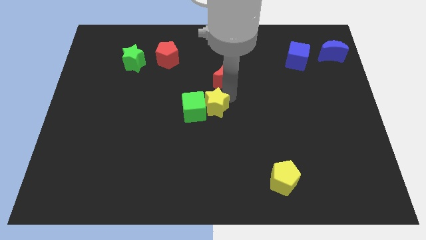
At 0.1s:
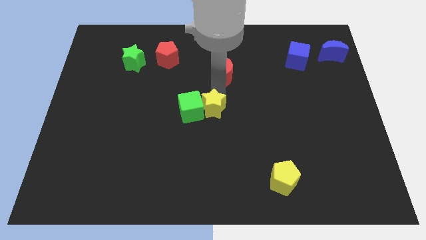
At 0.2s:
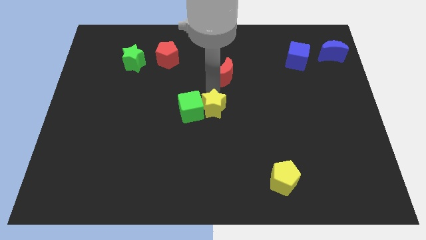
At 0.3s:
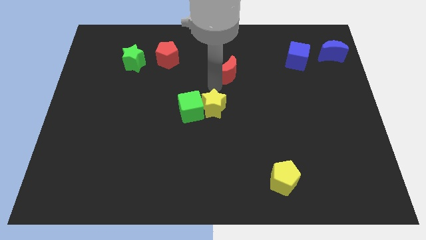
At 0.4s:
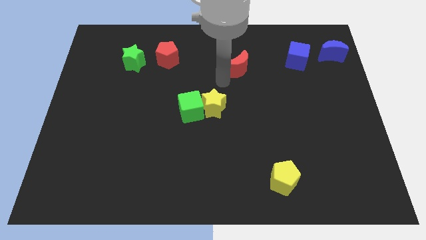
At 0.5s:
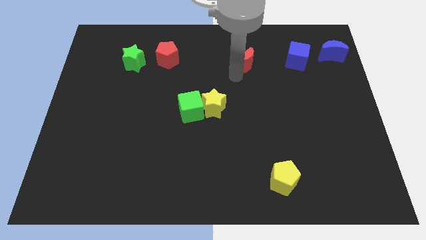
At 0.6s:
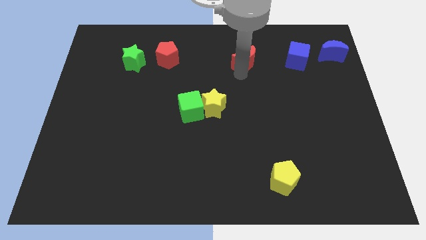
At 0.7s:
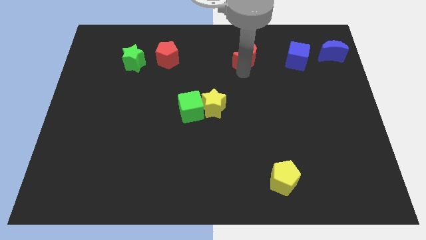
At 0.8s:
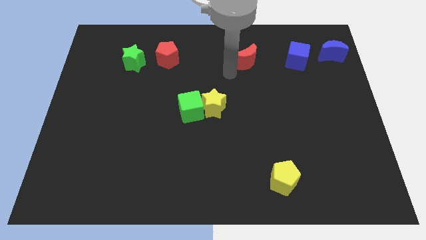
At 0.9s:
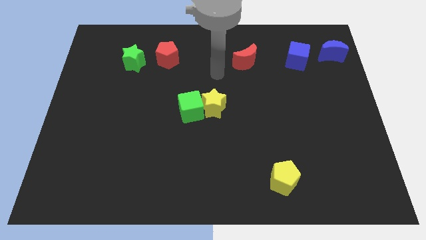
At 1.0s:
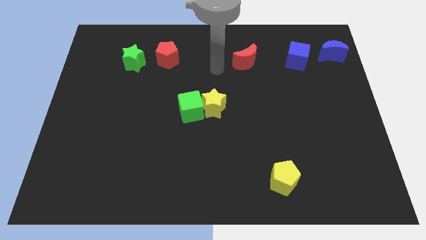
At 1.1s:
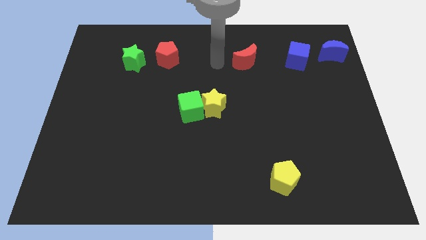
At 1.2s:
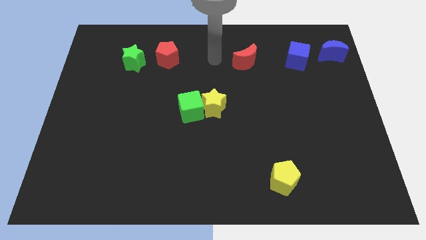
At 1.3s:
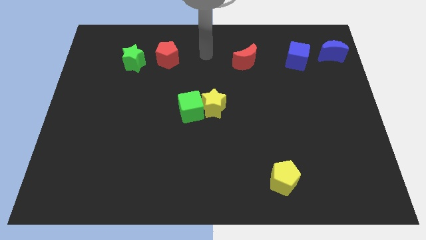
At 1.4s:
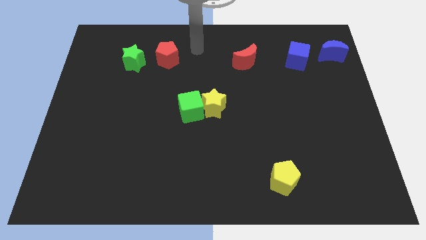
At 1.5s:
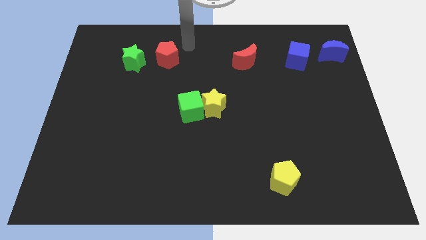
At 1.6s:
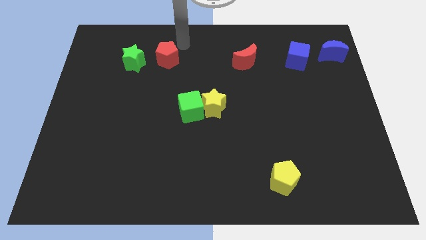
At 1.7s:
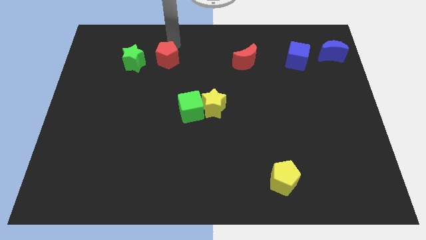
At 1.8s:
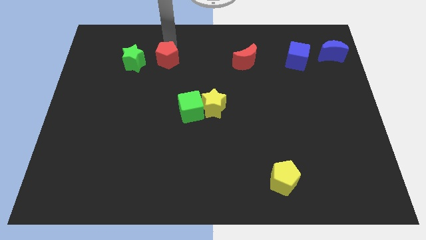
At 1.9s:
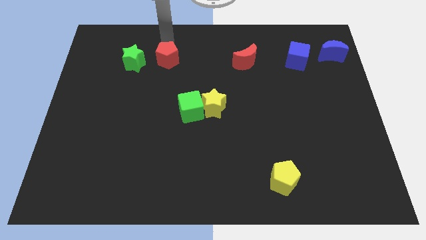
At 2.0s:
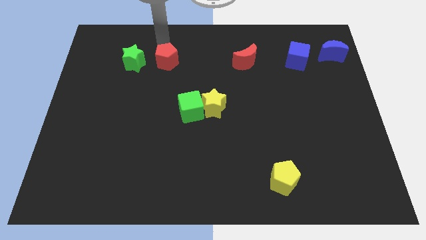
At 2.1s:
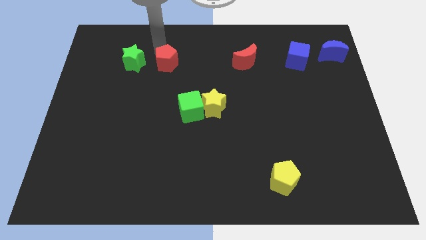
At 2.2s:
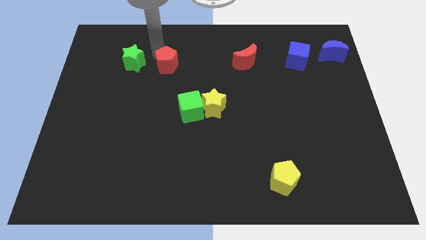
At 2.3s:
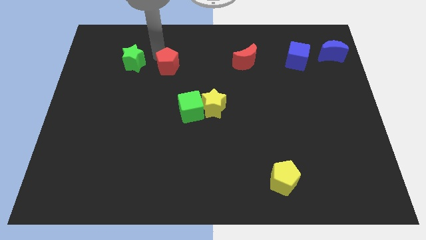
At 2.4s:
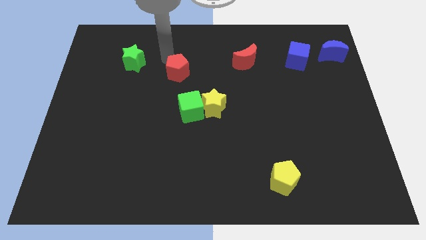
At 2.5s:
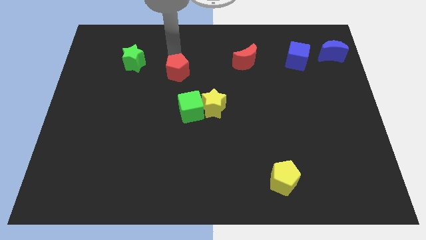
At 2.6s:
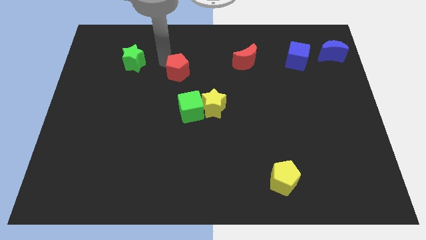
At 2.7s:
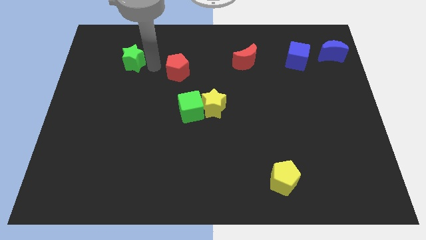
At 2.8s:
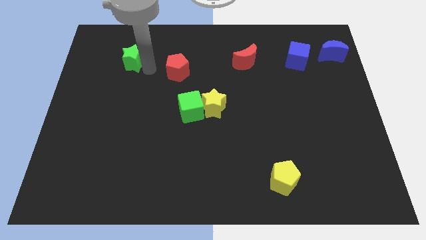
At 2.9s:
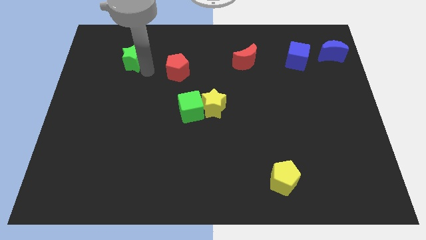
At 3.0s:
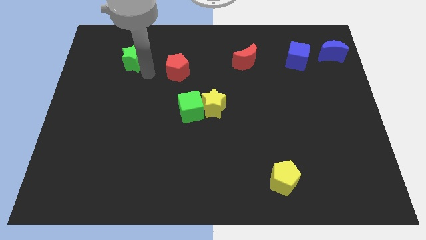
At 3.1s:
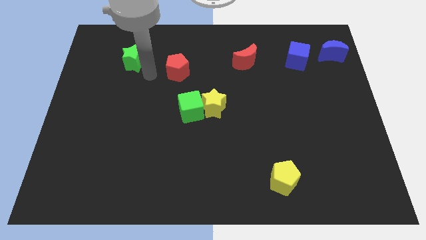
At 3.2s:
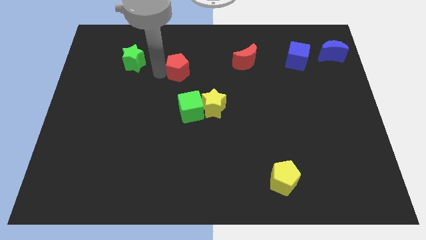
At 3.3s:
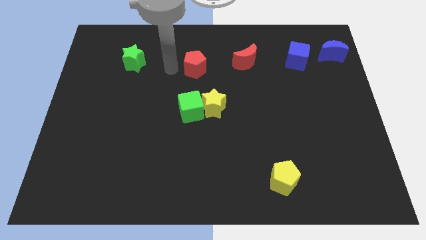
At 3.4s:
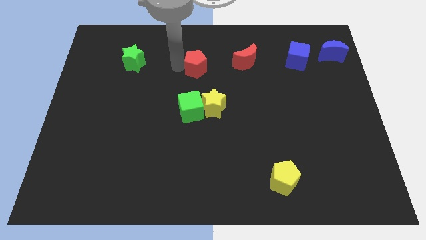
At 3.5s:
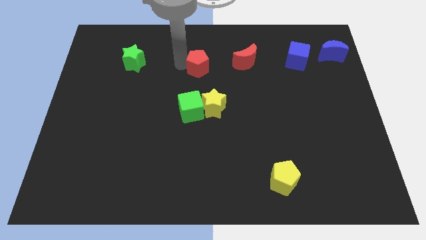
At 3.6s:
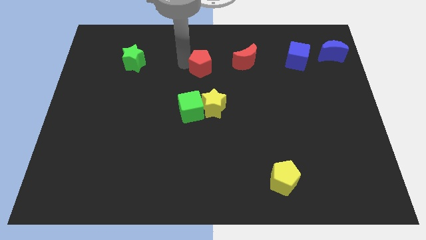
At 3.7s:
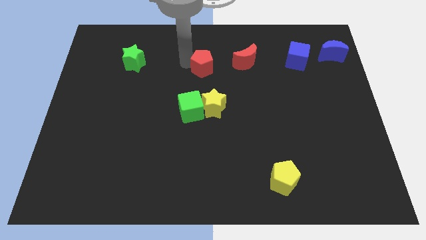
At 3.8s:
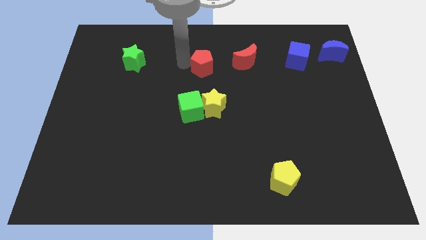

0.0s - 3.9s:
separate the red moon from the yellow star and move the red pentagon slightly to the right side

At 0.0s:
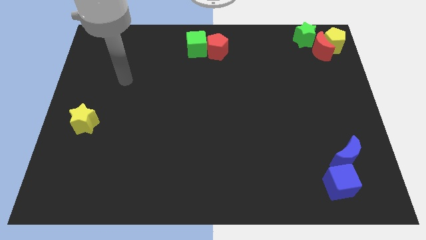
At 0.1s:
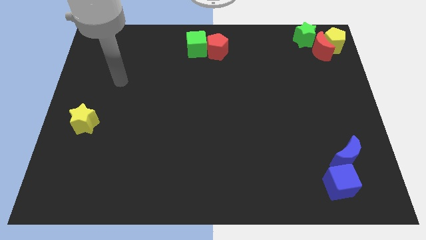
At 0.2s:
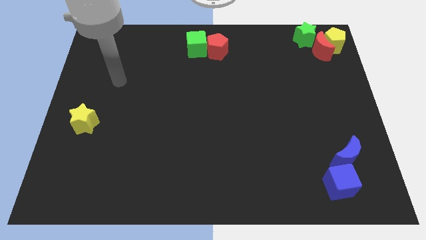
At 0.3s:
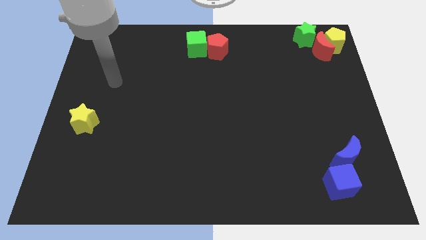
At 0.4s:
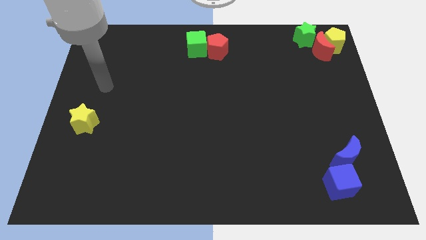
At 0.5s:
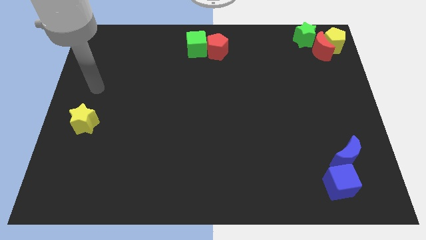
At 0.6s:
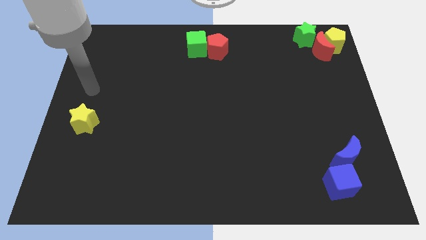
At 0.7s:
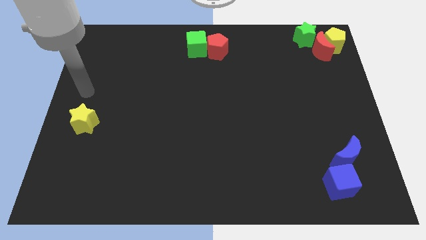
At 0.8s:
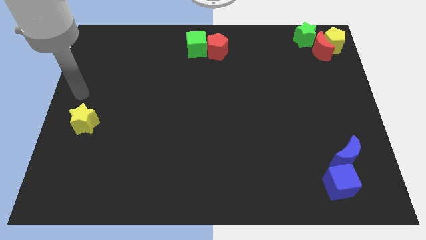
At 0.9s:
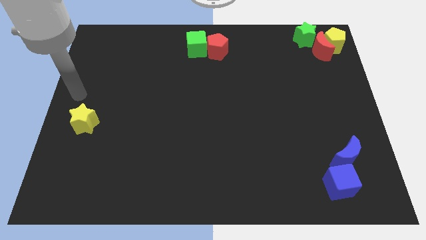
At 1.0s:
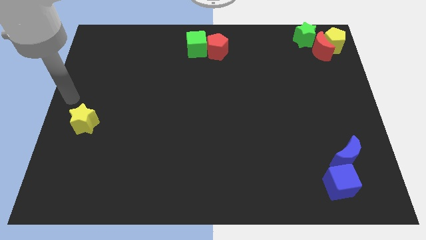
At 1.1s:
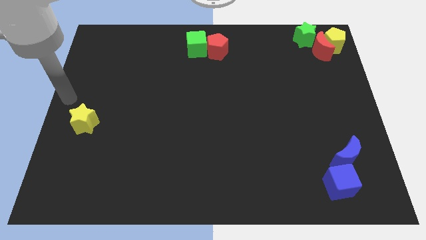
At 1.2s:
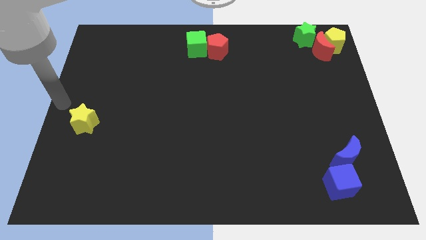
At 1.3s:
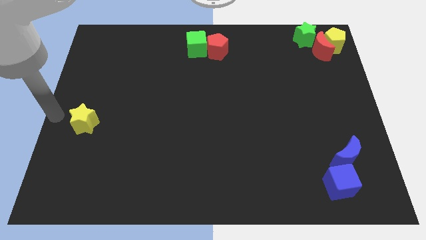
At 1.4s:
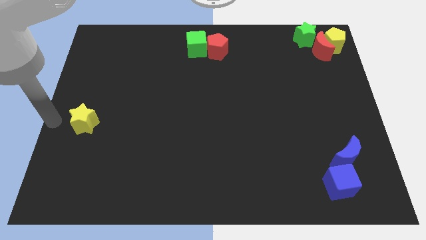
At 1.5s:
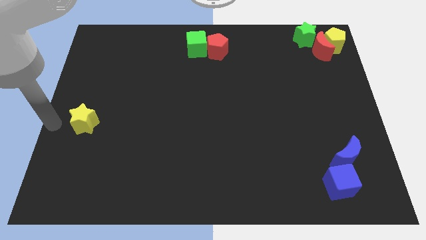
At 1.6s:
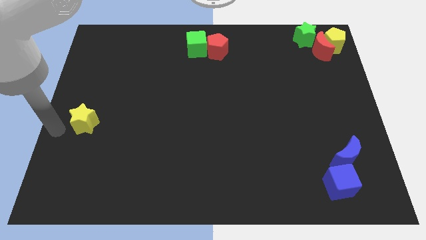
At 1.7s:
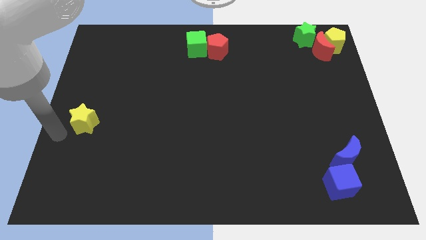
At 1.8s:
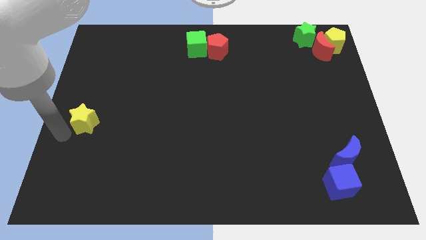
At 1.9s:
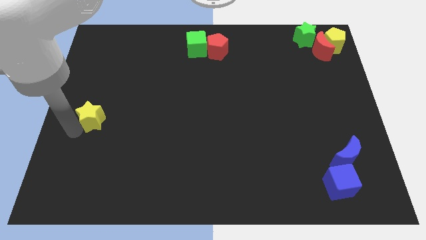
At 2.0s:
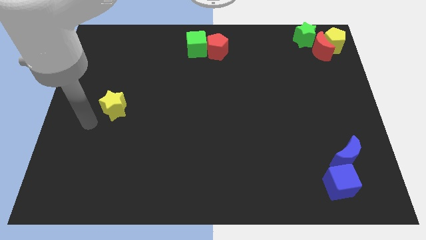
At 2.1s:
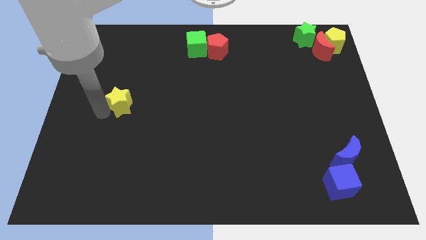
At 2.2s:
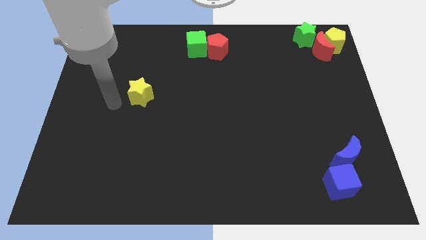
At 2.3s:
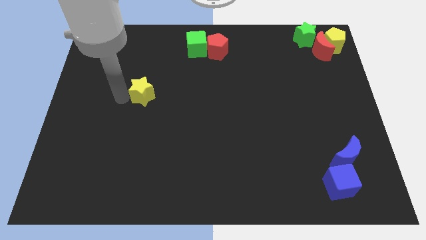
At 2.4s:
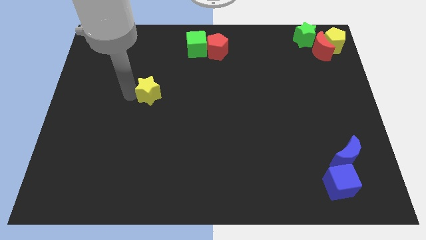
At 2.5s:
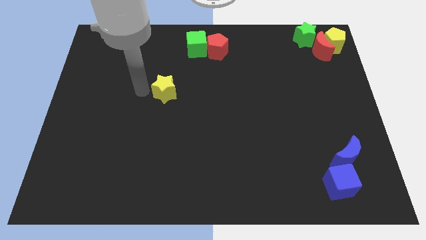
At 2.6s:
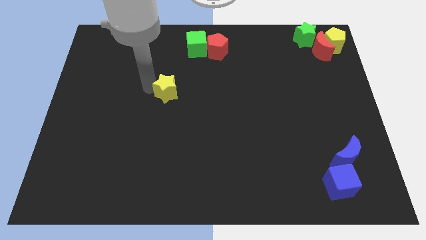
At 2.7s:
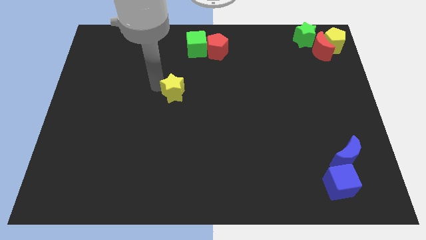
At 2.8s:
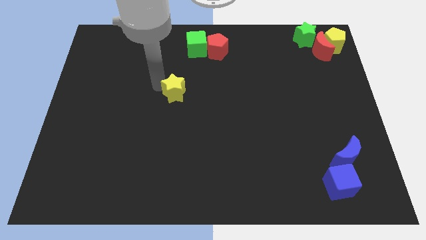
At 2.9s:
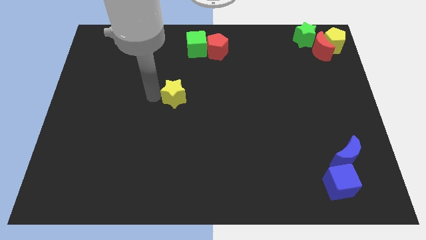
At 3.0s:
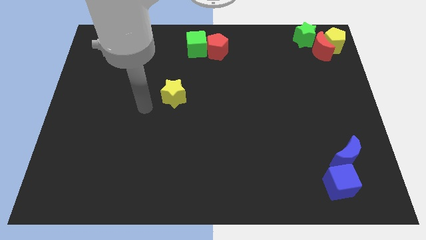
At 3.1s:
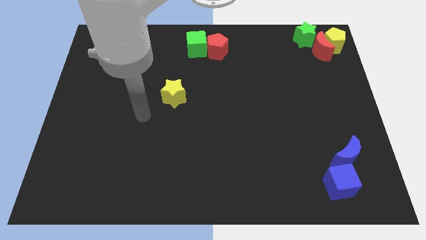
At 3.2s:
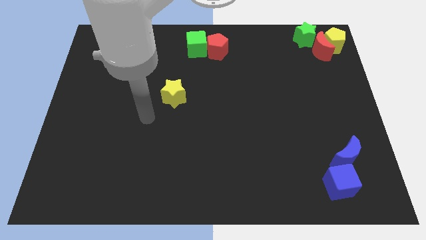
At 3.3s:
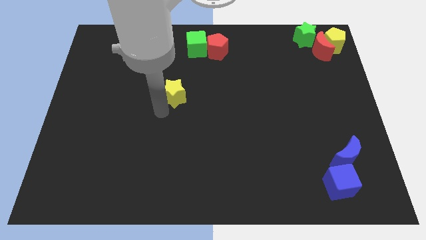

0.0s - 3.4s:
push the yellow star diagonally on the bottom left side of the green cube

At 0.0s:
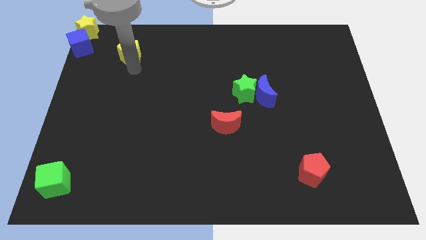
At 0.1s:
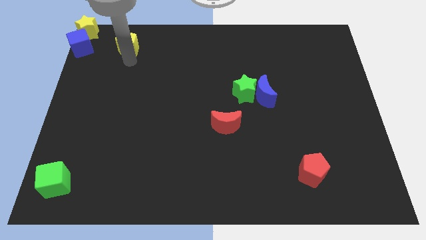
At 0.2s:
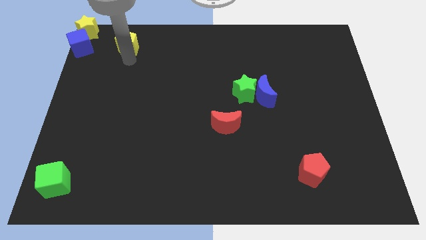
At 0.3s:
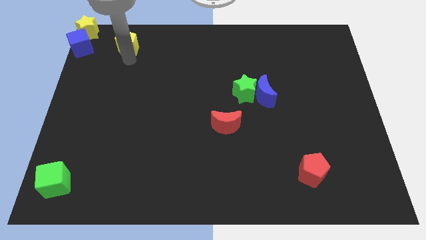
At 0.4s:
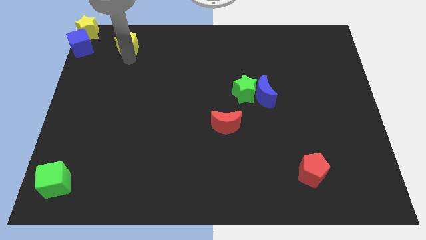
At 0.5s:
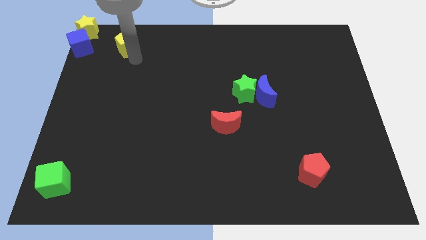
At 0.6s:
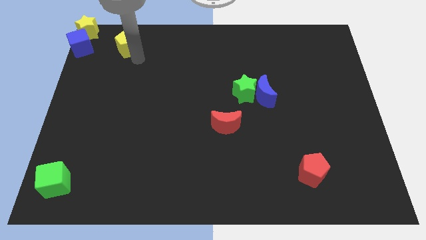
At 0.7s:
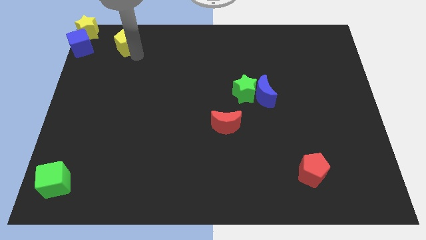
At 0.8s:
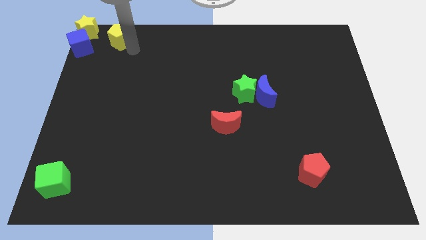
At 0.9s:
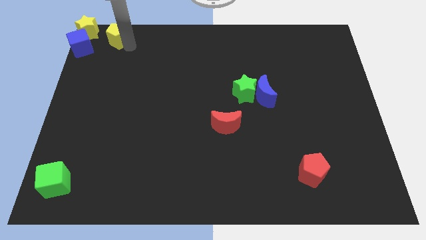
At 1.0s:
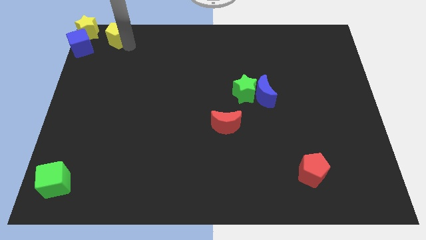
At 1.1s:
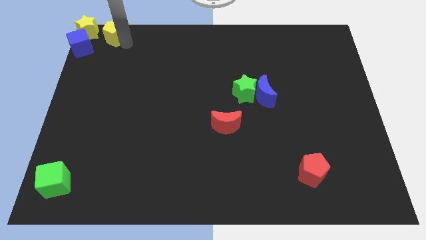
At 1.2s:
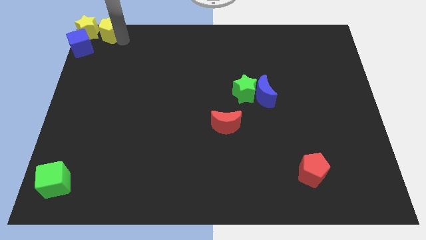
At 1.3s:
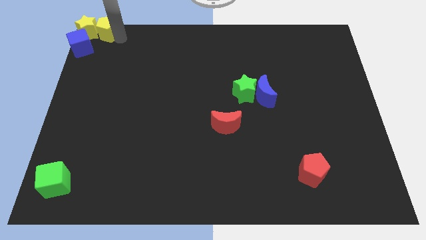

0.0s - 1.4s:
move the yellow pentagon to the right of the yellow star

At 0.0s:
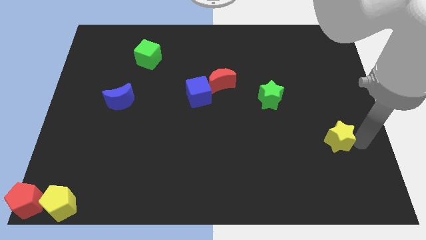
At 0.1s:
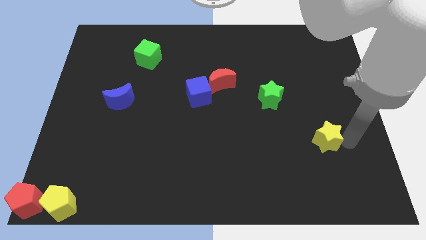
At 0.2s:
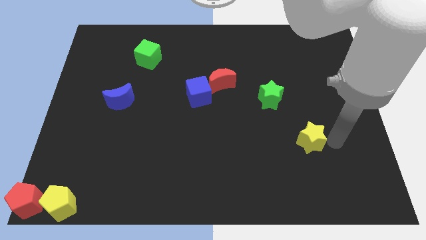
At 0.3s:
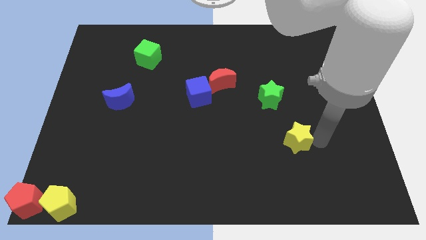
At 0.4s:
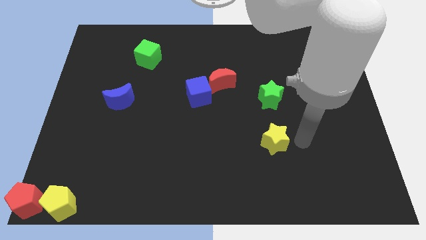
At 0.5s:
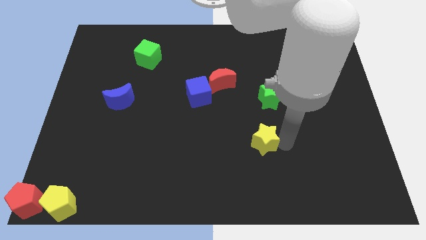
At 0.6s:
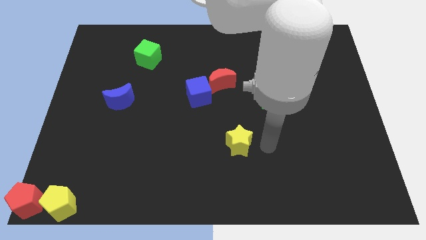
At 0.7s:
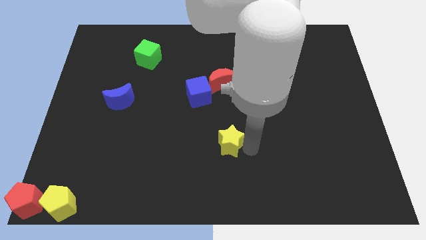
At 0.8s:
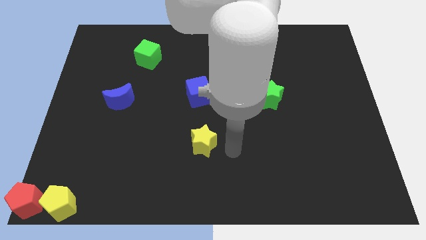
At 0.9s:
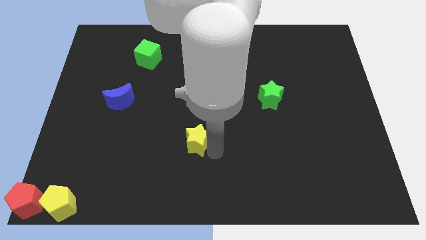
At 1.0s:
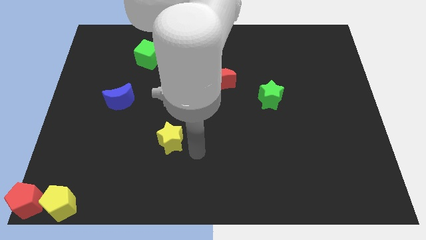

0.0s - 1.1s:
drag yellow star to bottom left of blue cube
